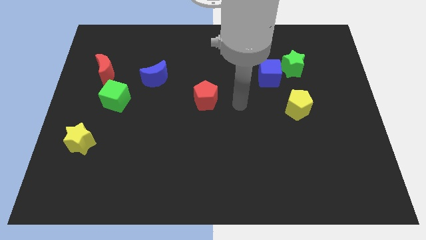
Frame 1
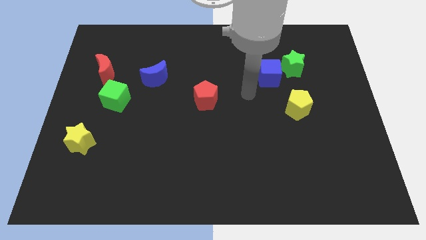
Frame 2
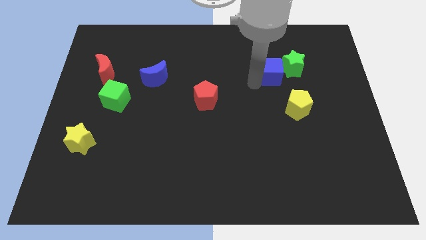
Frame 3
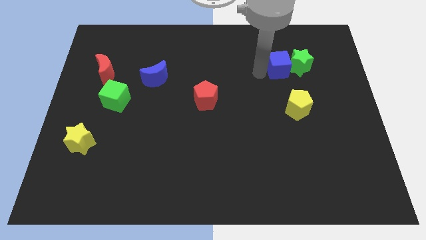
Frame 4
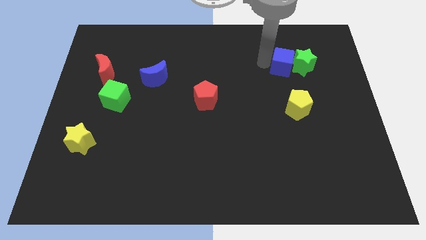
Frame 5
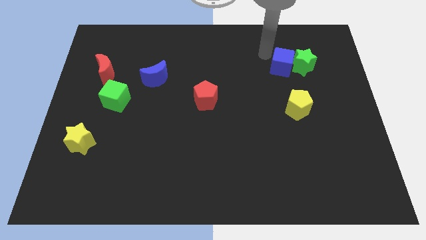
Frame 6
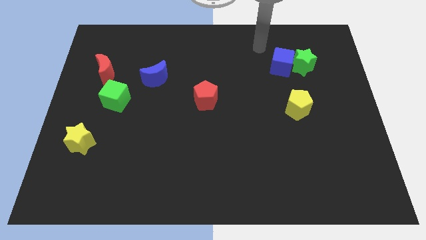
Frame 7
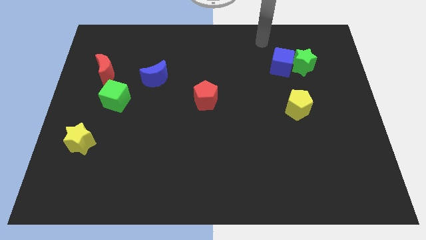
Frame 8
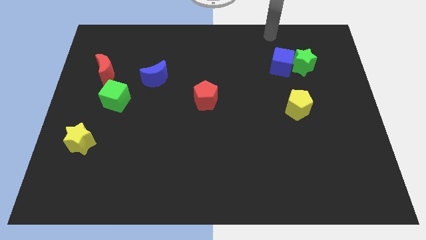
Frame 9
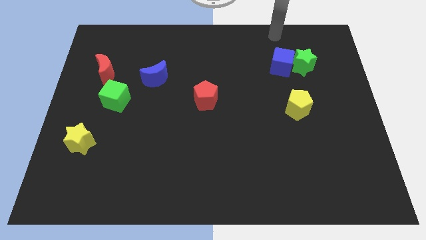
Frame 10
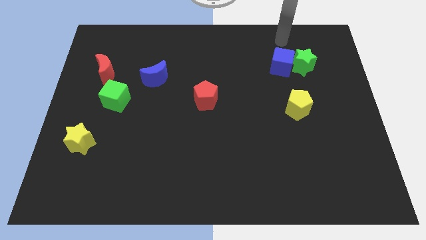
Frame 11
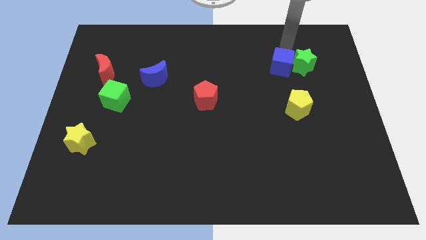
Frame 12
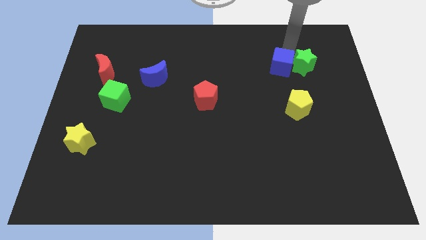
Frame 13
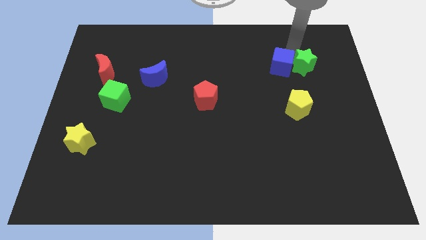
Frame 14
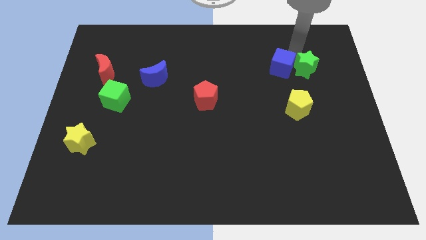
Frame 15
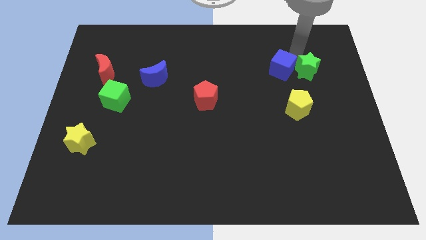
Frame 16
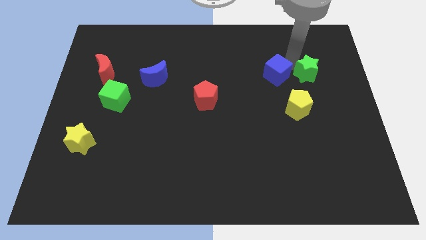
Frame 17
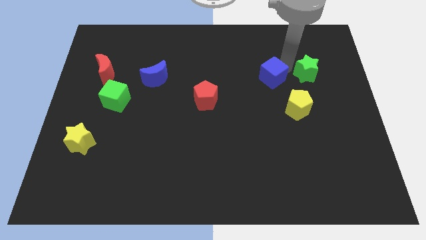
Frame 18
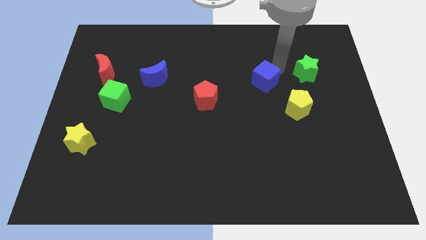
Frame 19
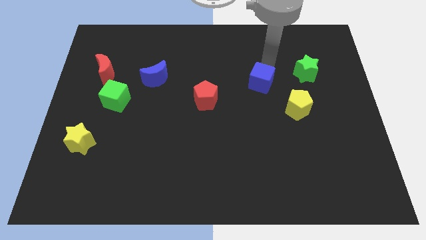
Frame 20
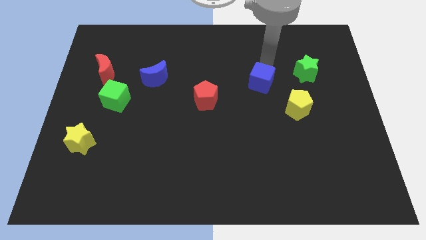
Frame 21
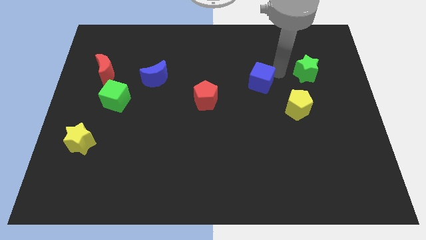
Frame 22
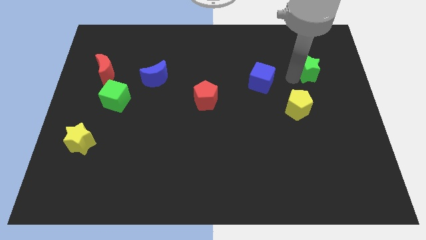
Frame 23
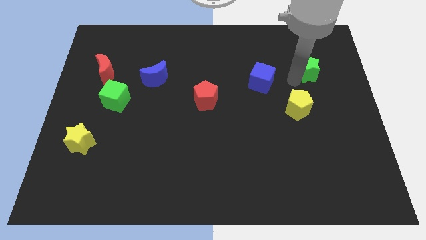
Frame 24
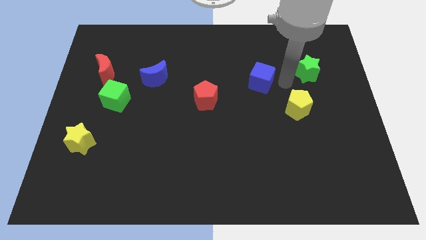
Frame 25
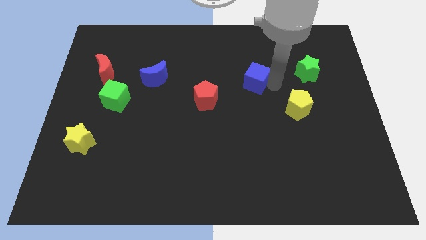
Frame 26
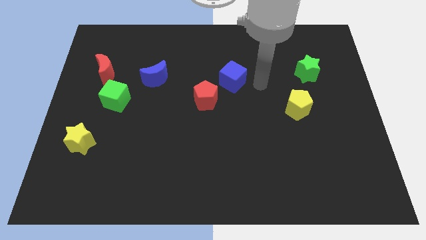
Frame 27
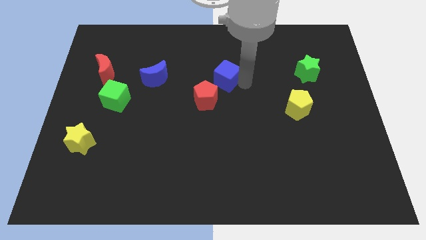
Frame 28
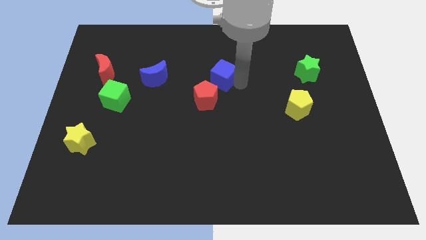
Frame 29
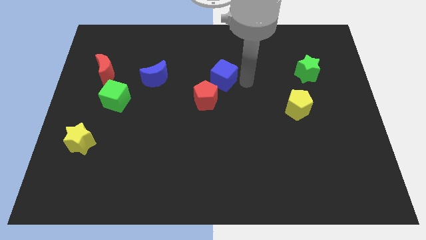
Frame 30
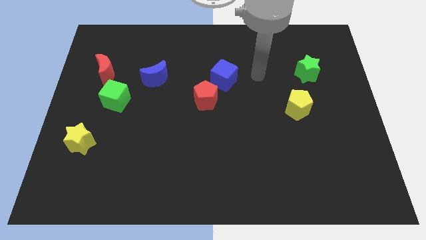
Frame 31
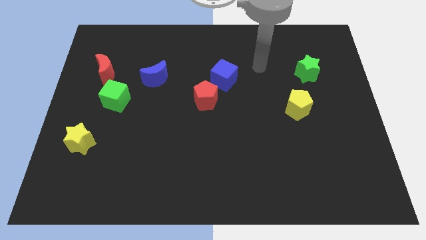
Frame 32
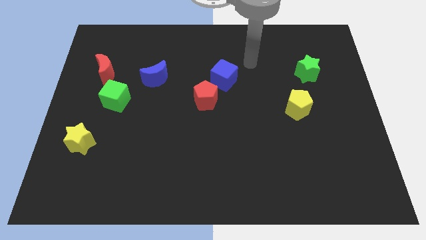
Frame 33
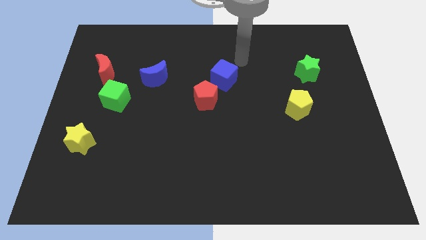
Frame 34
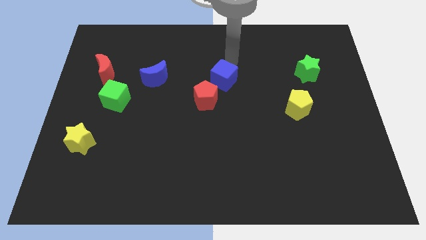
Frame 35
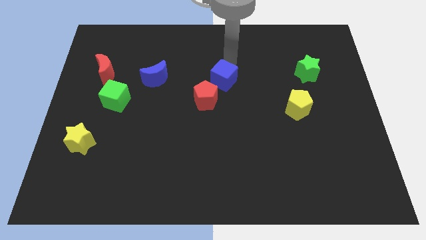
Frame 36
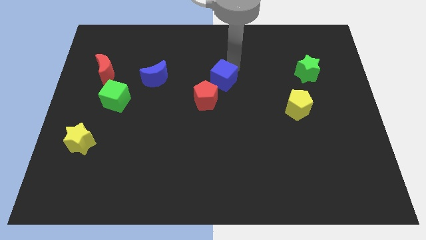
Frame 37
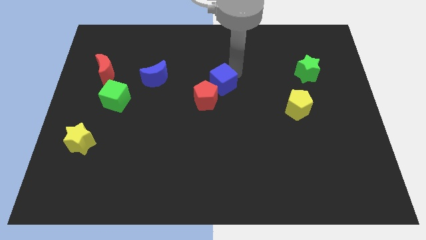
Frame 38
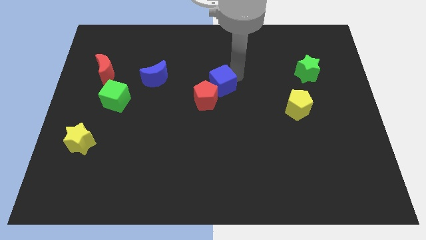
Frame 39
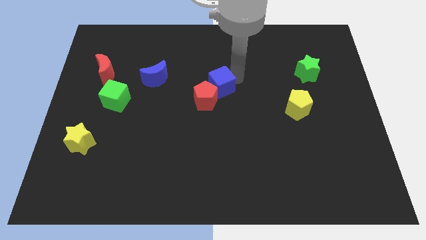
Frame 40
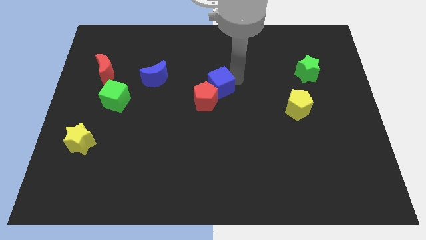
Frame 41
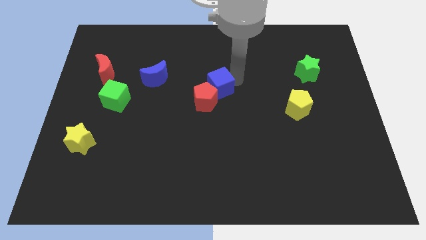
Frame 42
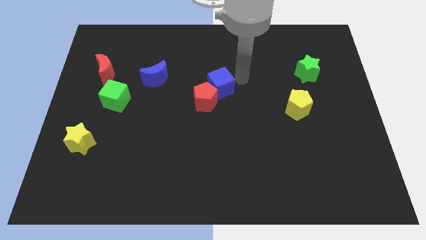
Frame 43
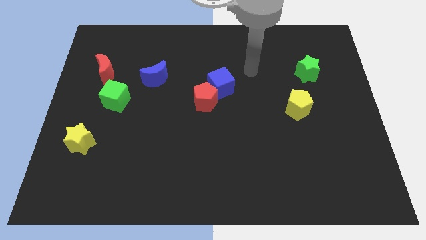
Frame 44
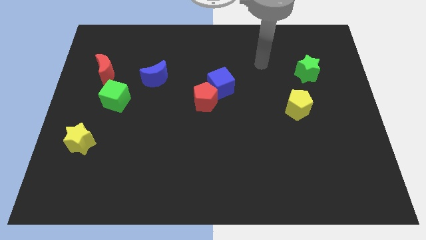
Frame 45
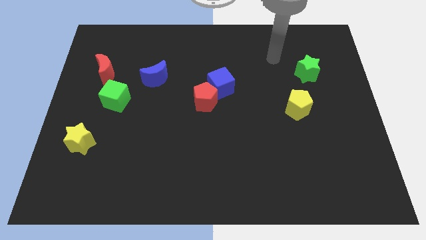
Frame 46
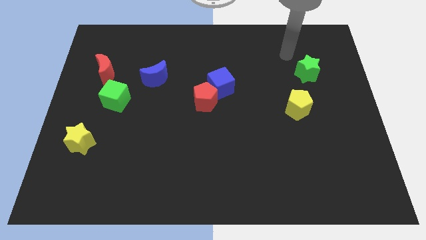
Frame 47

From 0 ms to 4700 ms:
move the blue cube into the red pentagon

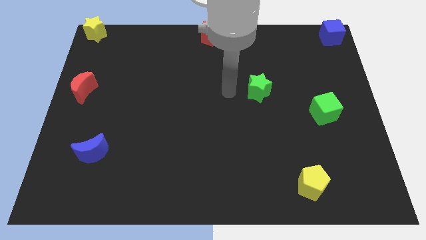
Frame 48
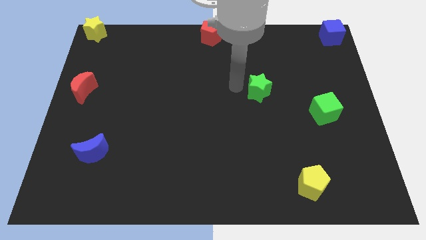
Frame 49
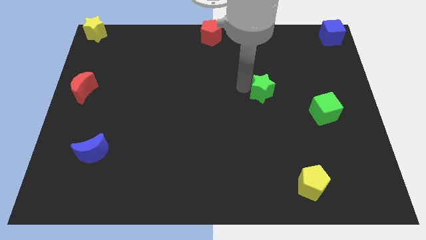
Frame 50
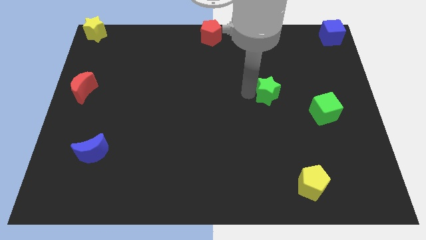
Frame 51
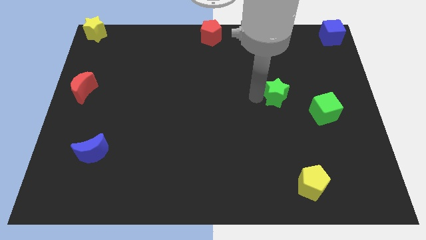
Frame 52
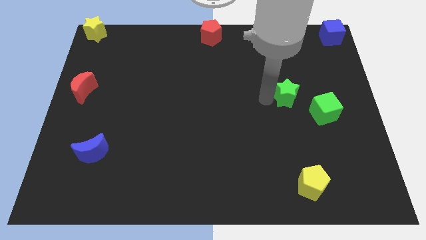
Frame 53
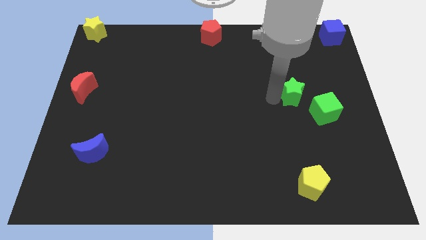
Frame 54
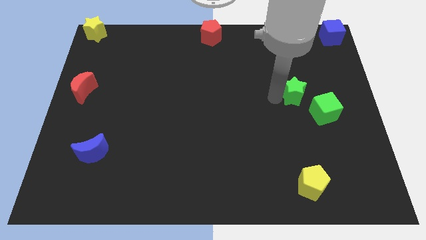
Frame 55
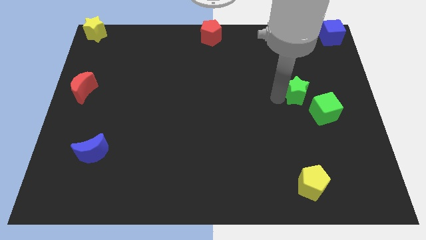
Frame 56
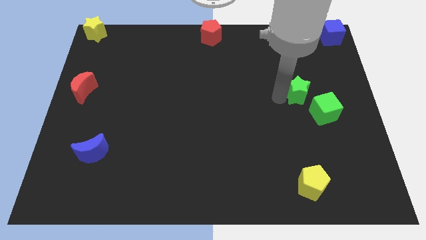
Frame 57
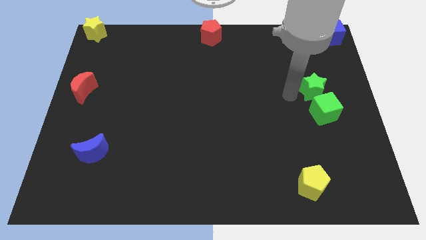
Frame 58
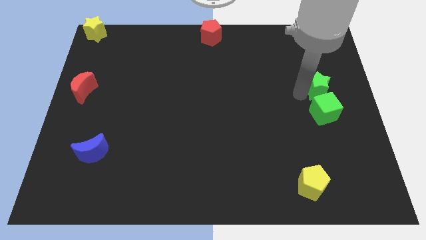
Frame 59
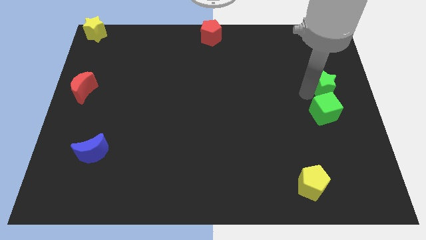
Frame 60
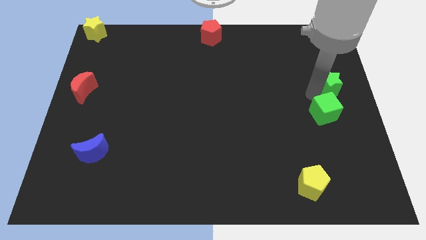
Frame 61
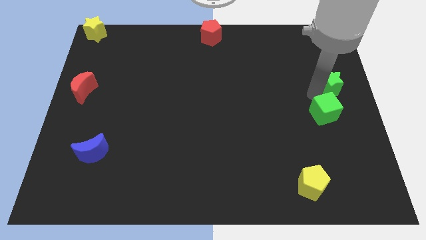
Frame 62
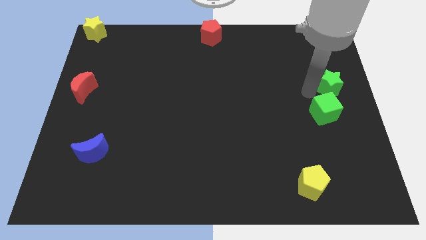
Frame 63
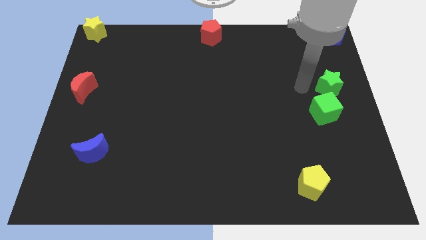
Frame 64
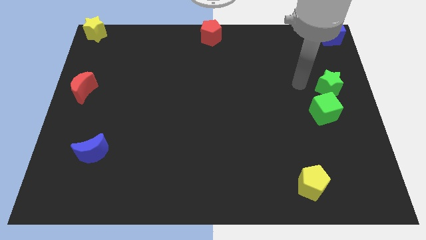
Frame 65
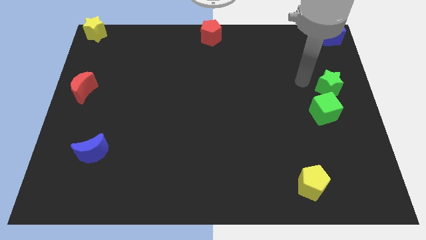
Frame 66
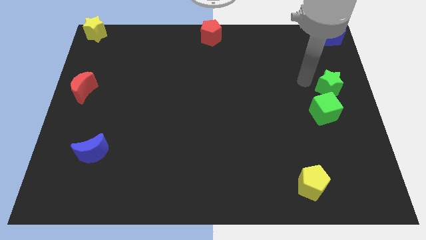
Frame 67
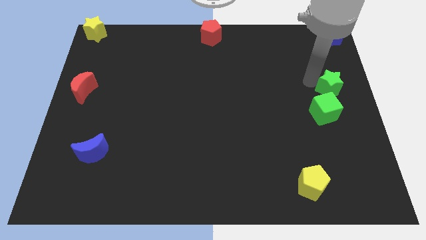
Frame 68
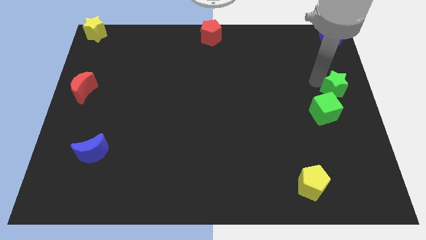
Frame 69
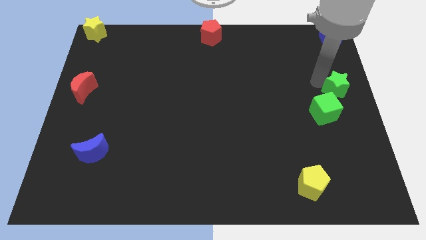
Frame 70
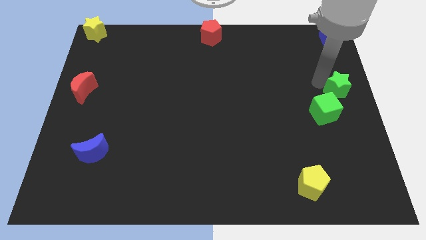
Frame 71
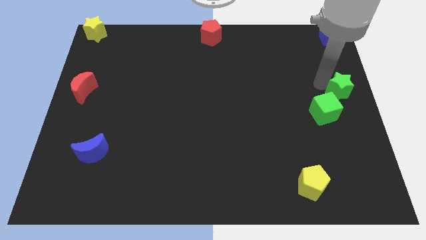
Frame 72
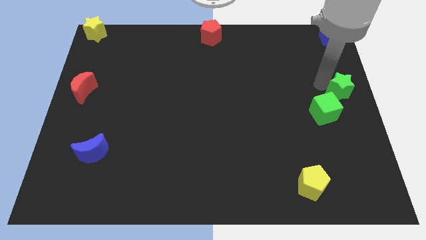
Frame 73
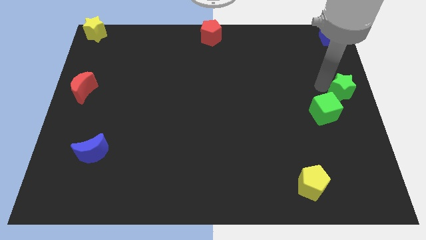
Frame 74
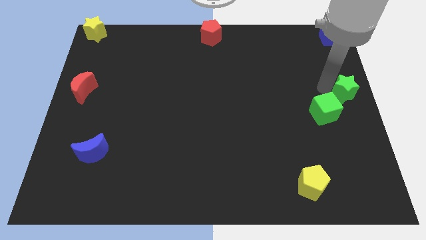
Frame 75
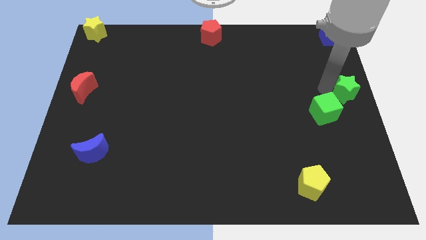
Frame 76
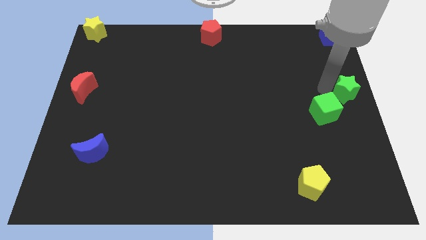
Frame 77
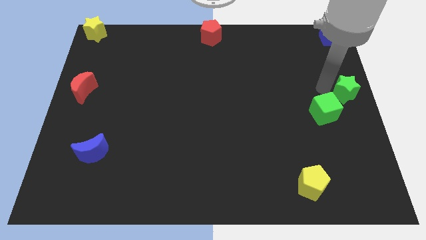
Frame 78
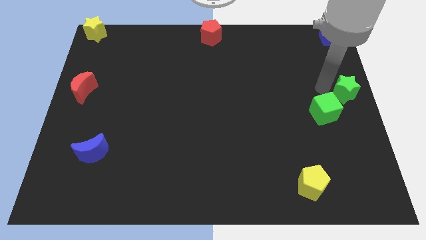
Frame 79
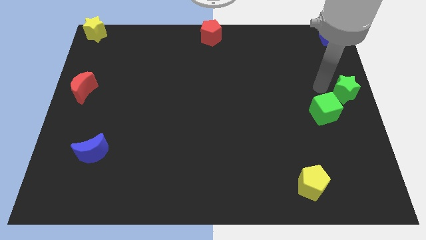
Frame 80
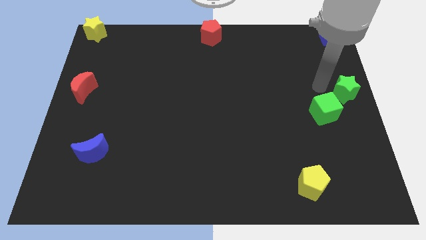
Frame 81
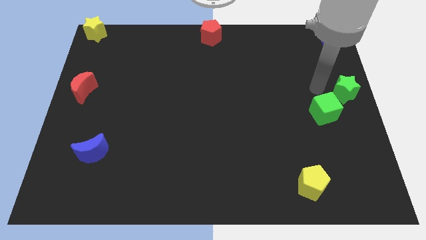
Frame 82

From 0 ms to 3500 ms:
slide the green star to the center right side of the board

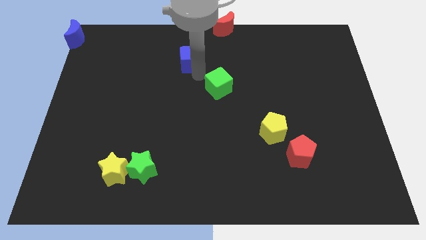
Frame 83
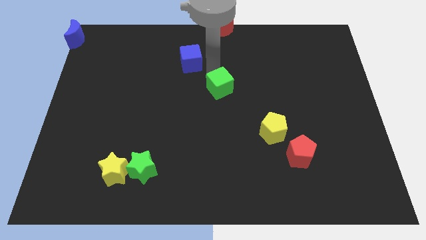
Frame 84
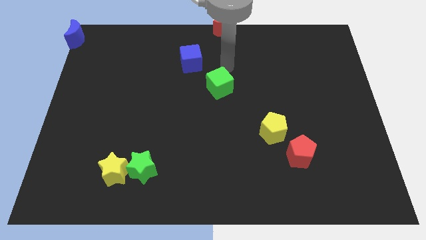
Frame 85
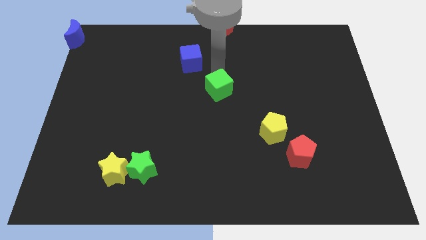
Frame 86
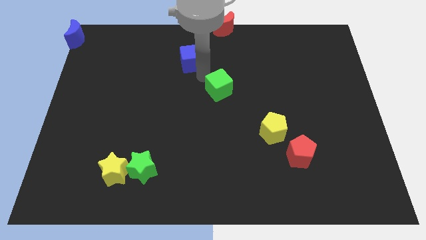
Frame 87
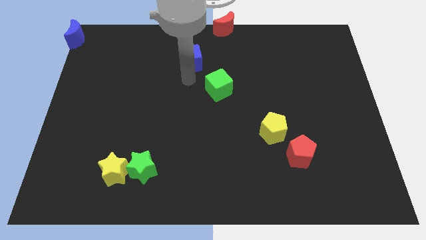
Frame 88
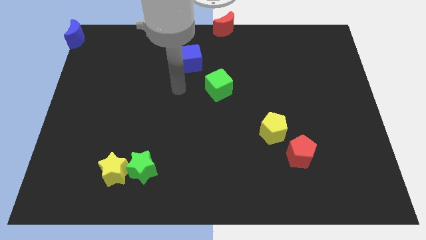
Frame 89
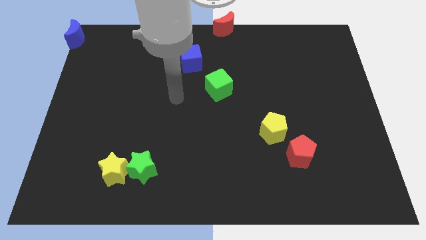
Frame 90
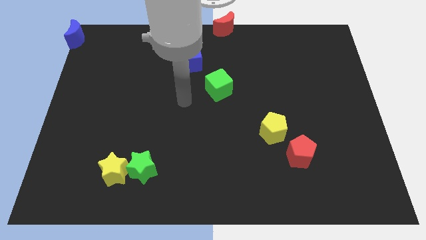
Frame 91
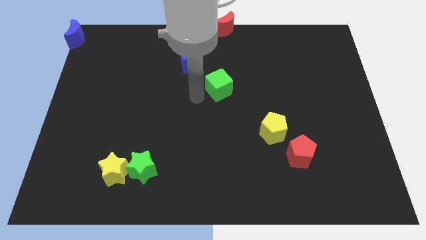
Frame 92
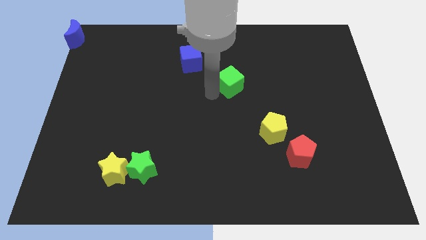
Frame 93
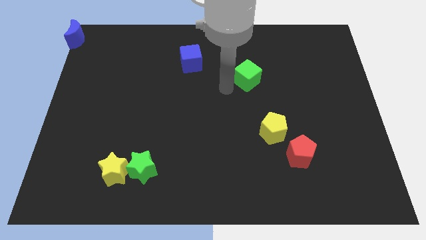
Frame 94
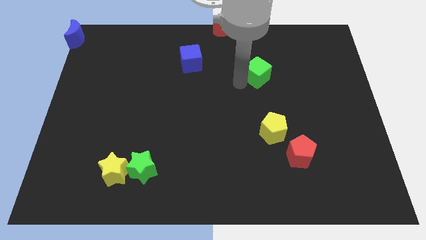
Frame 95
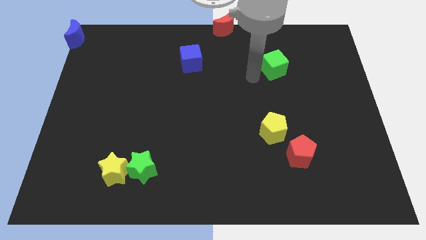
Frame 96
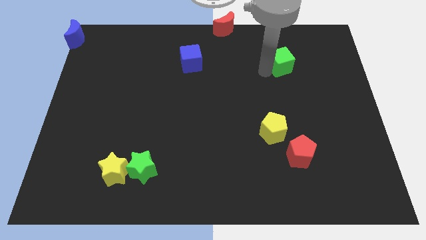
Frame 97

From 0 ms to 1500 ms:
place the green cube below the red moon
